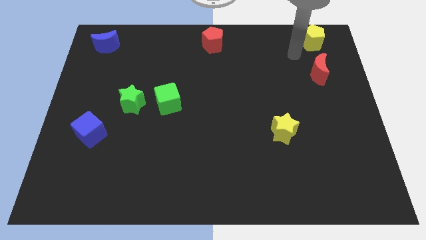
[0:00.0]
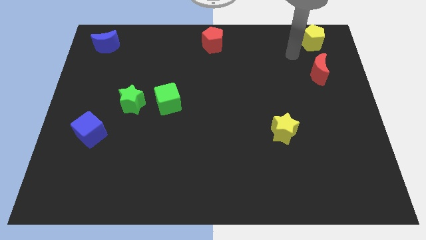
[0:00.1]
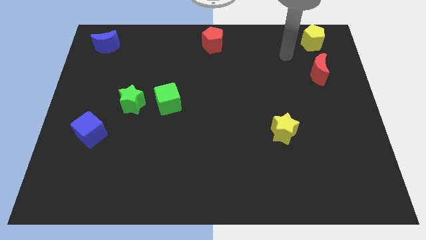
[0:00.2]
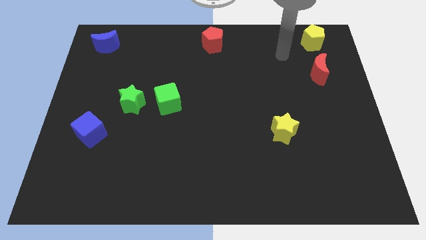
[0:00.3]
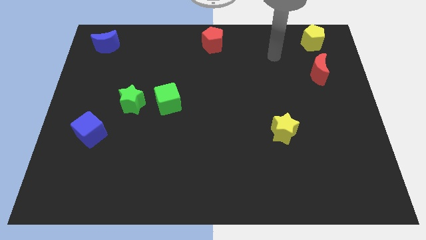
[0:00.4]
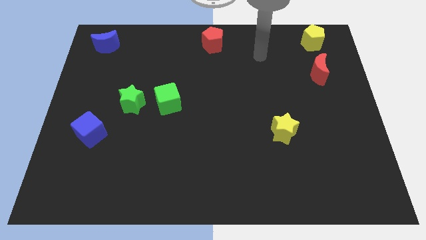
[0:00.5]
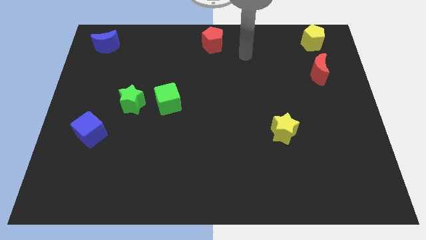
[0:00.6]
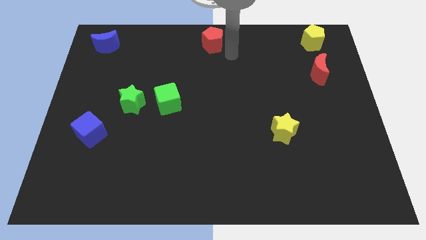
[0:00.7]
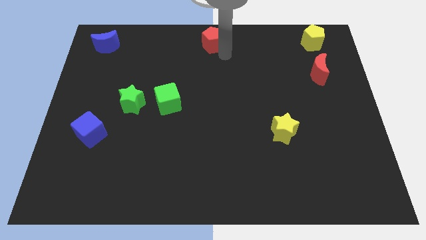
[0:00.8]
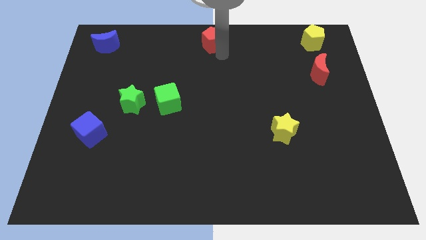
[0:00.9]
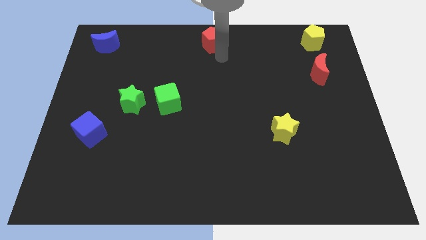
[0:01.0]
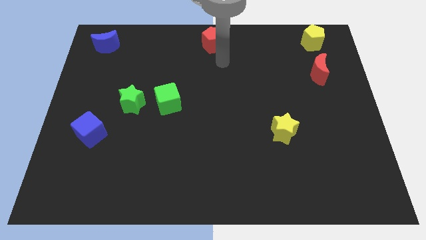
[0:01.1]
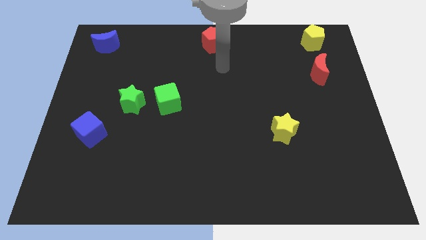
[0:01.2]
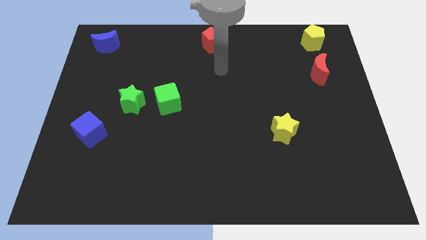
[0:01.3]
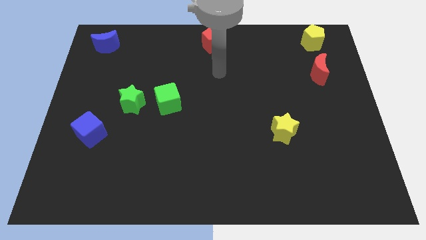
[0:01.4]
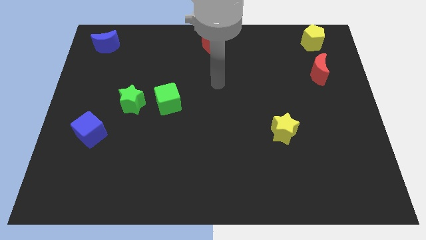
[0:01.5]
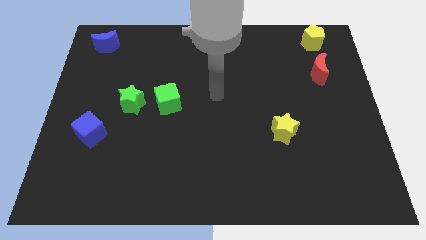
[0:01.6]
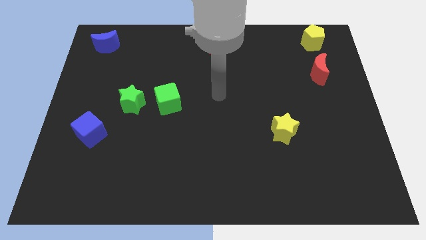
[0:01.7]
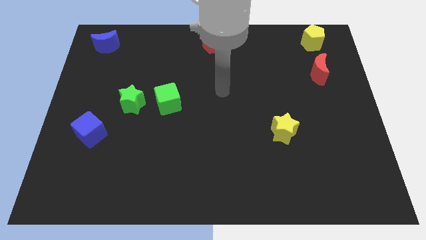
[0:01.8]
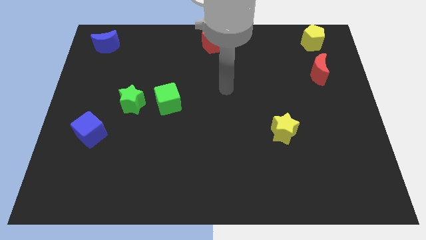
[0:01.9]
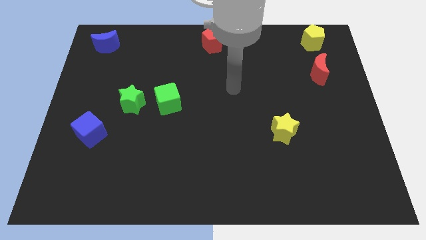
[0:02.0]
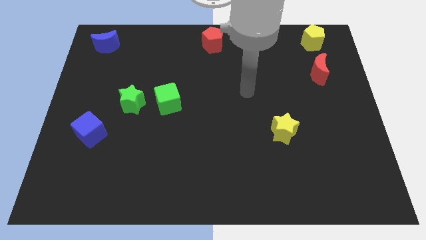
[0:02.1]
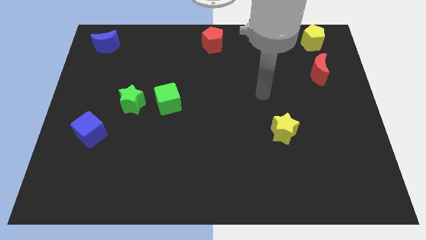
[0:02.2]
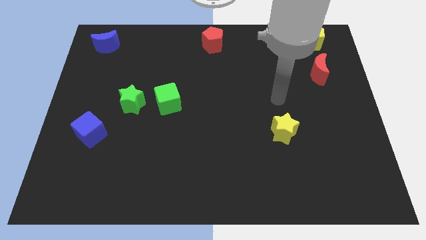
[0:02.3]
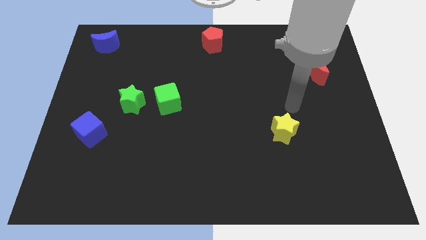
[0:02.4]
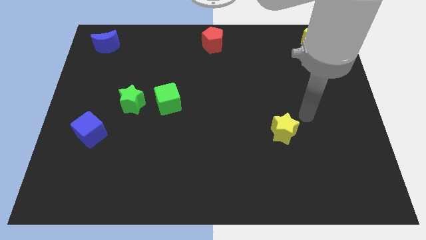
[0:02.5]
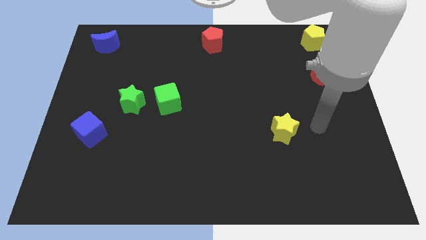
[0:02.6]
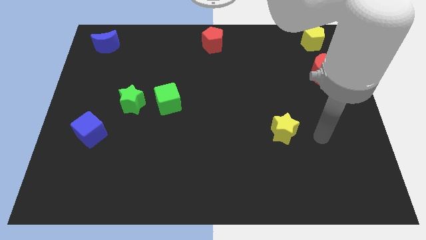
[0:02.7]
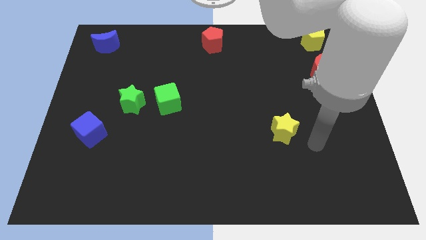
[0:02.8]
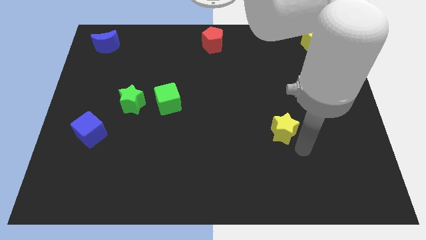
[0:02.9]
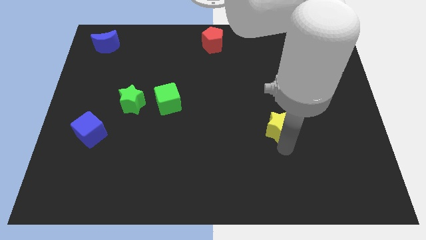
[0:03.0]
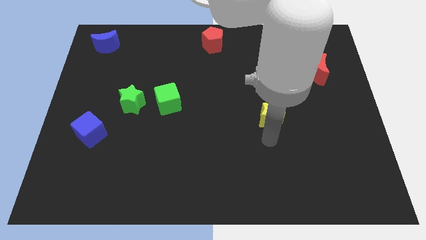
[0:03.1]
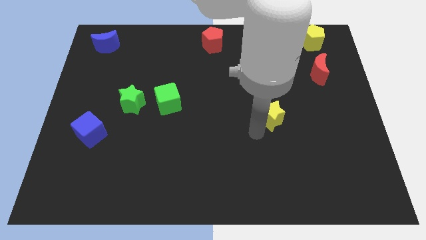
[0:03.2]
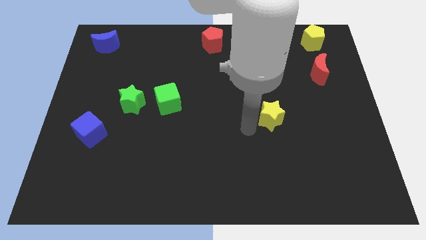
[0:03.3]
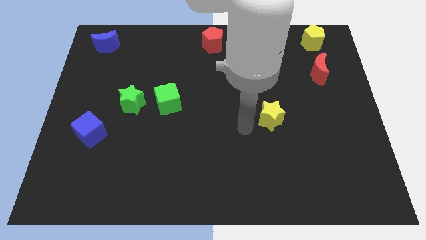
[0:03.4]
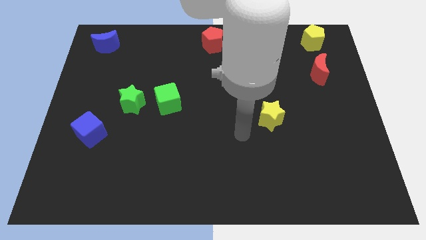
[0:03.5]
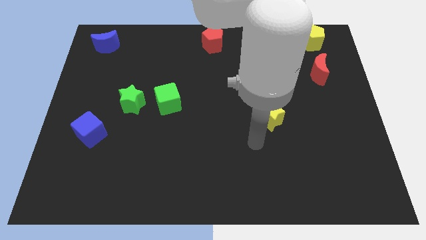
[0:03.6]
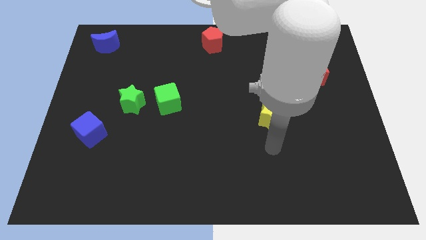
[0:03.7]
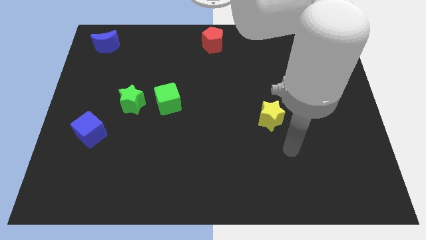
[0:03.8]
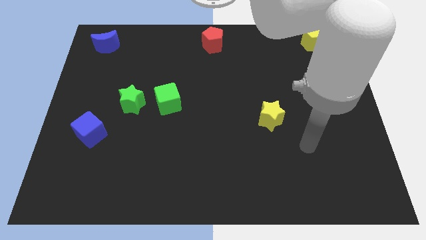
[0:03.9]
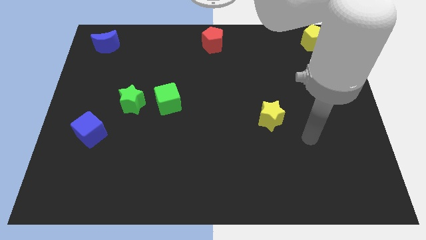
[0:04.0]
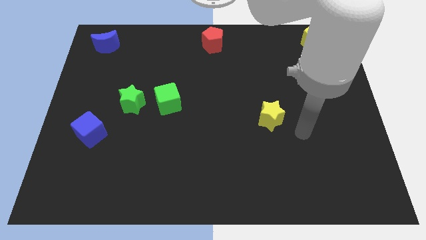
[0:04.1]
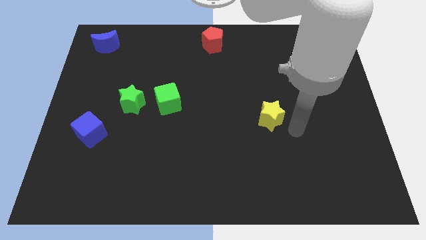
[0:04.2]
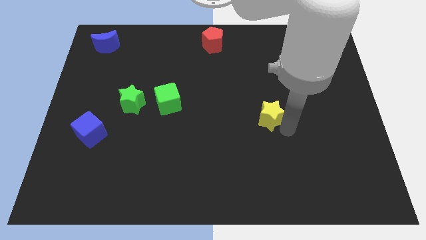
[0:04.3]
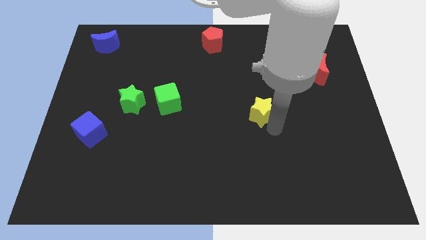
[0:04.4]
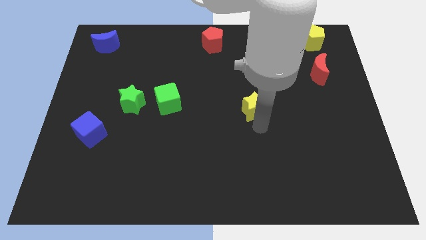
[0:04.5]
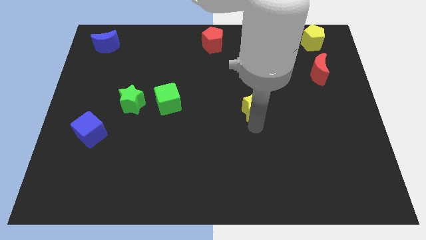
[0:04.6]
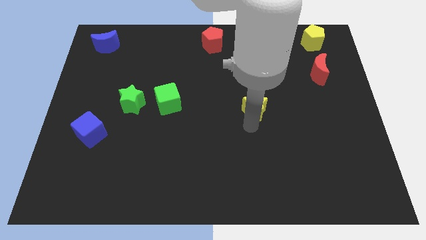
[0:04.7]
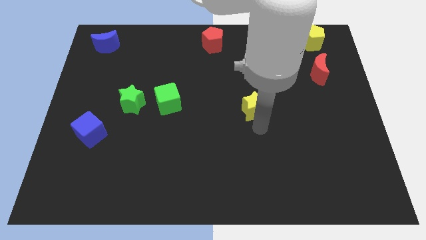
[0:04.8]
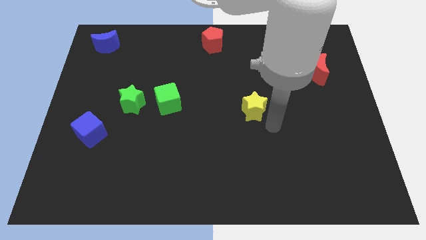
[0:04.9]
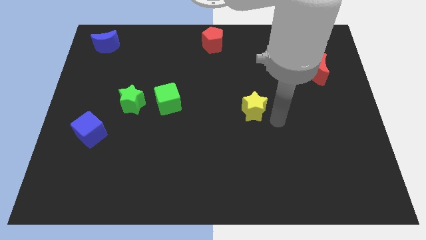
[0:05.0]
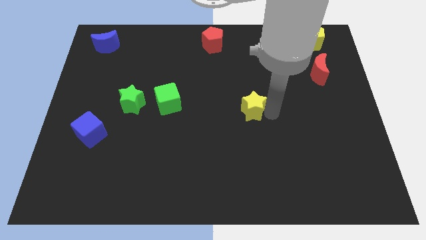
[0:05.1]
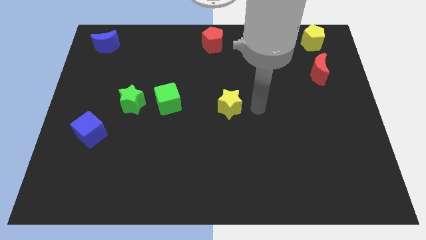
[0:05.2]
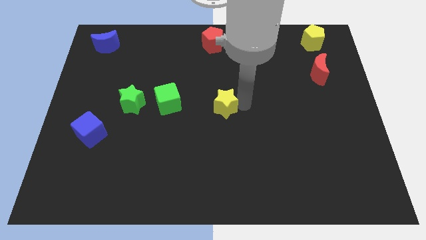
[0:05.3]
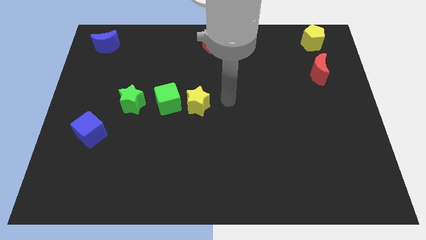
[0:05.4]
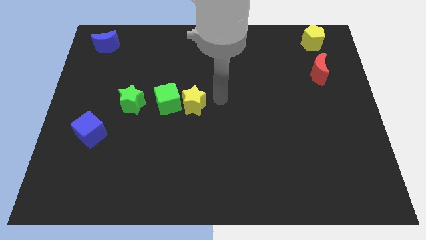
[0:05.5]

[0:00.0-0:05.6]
move the yellow star towards the right side of the green cube

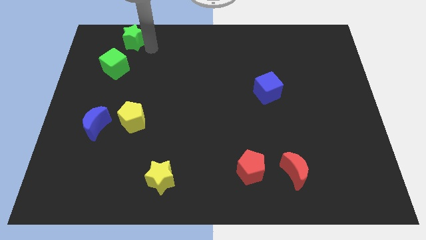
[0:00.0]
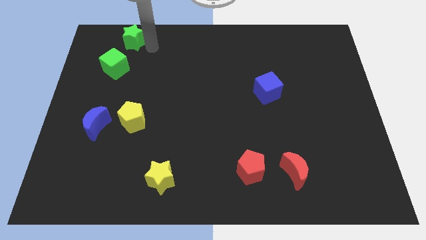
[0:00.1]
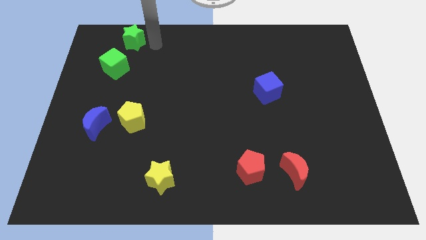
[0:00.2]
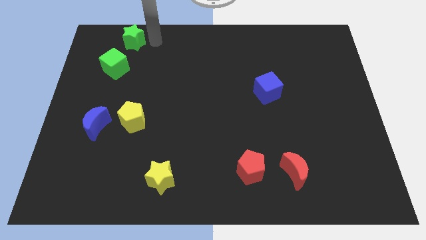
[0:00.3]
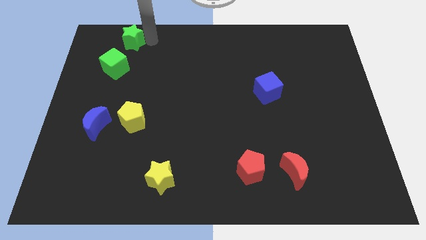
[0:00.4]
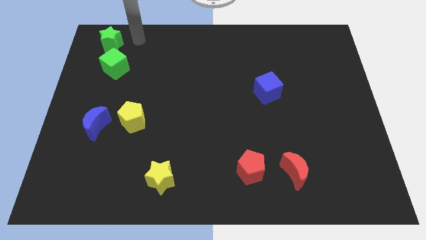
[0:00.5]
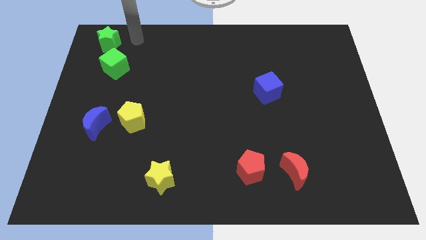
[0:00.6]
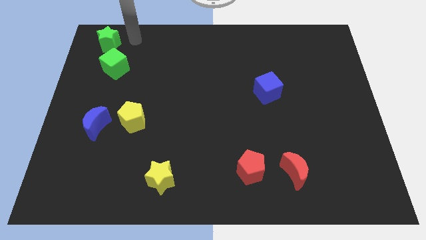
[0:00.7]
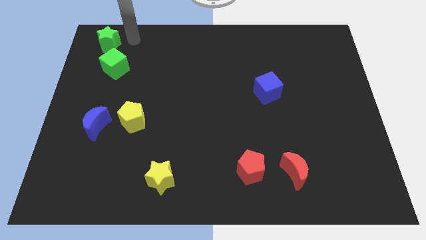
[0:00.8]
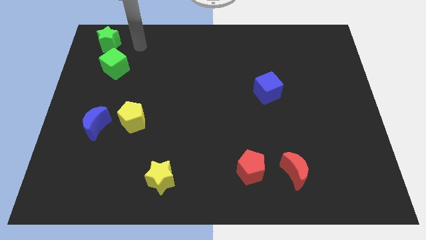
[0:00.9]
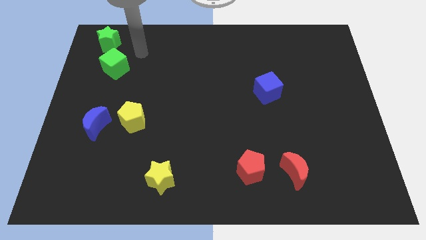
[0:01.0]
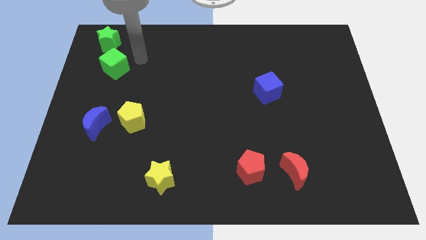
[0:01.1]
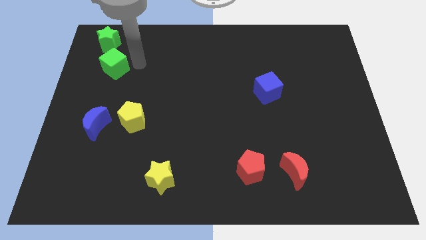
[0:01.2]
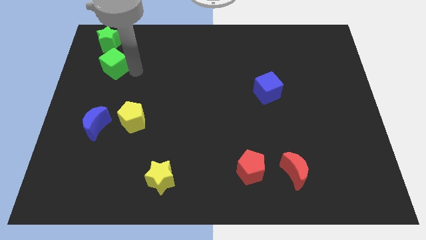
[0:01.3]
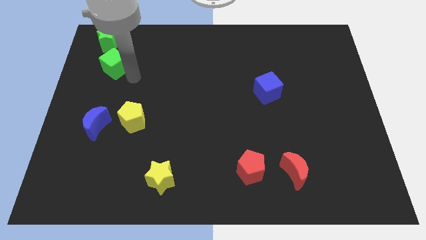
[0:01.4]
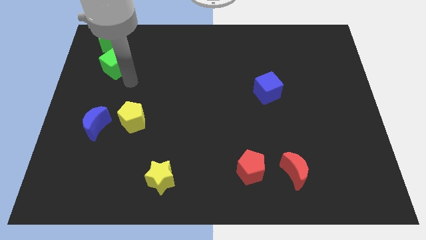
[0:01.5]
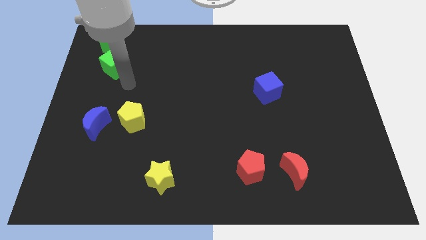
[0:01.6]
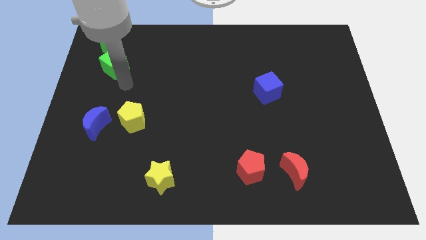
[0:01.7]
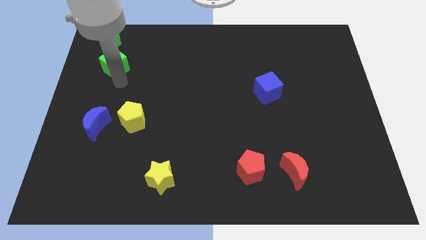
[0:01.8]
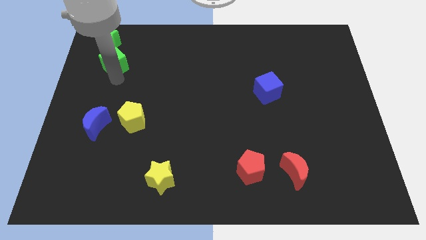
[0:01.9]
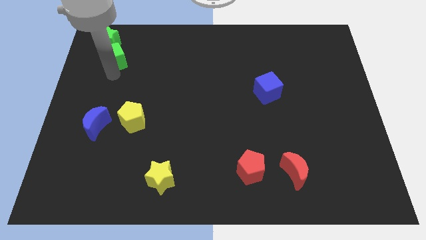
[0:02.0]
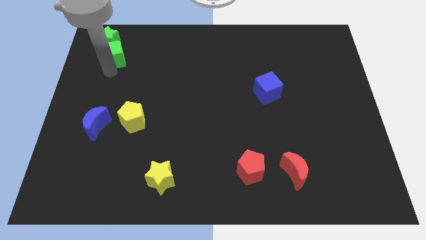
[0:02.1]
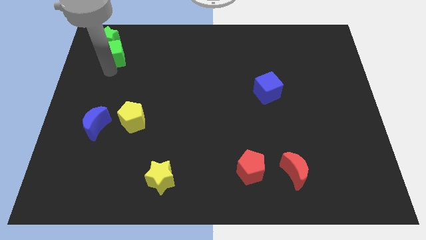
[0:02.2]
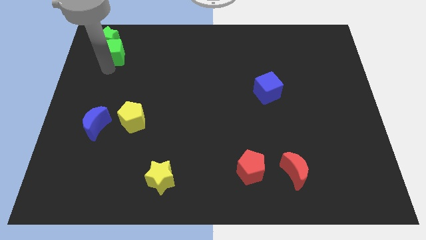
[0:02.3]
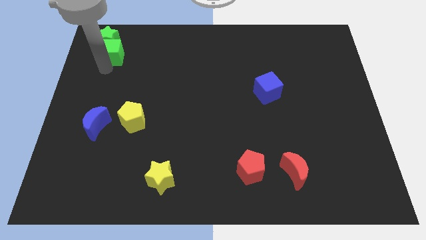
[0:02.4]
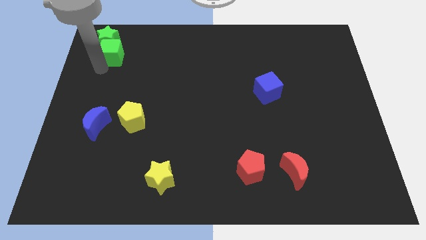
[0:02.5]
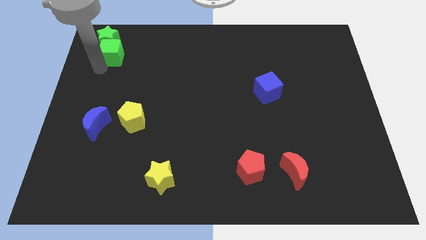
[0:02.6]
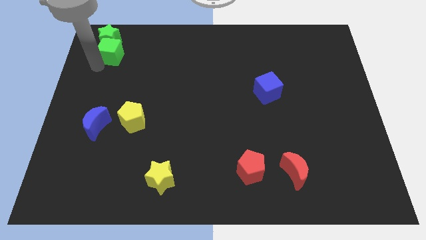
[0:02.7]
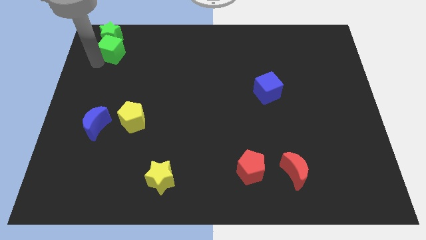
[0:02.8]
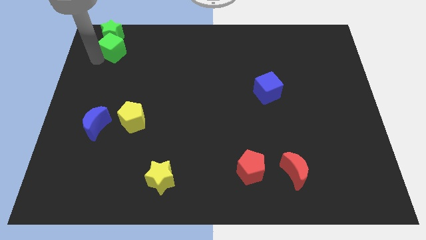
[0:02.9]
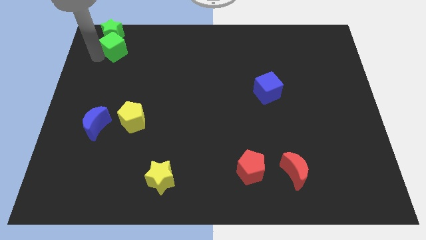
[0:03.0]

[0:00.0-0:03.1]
move the green blocks to the top left of the table

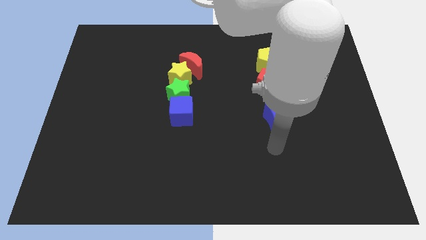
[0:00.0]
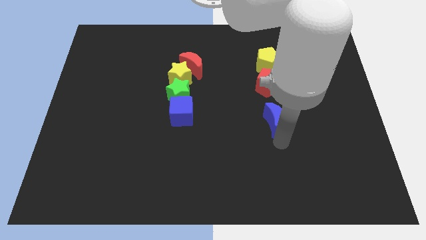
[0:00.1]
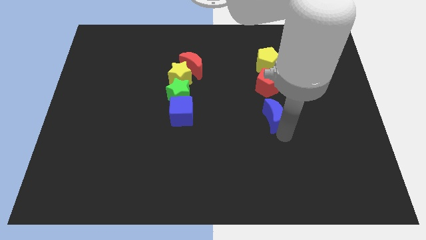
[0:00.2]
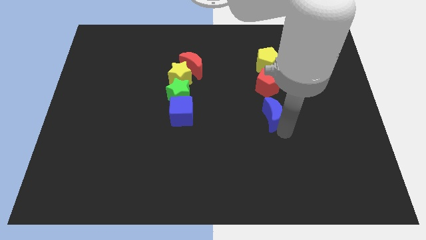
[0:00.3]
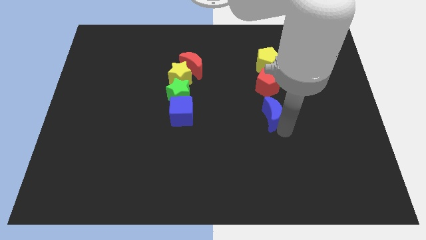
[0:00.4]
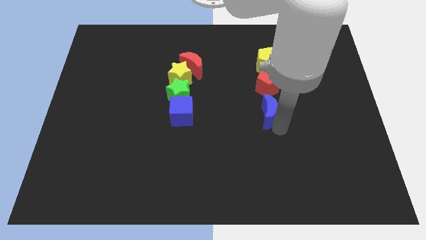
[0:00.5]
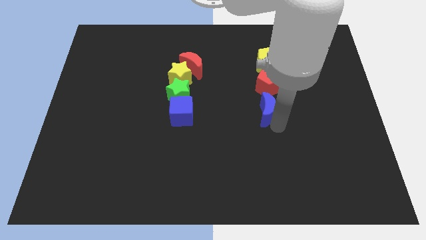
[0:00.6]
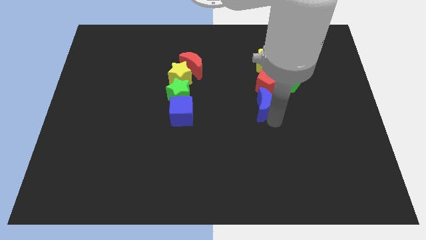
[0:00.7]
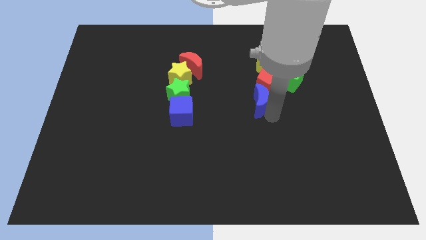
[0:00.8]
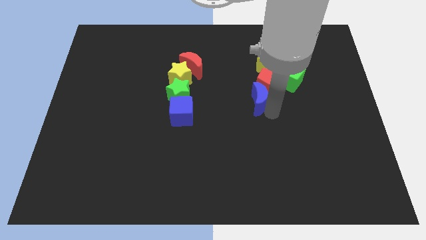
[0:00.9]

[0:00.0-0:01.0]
move the blue crescent below the red pentagon
